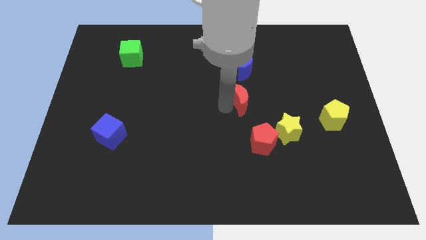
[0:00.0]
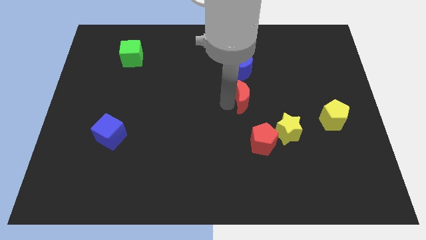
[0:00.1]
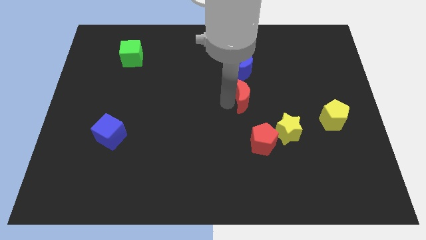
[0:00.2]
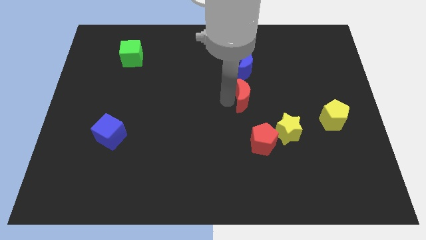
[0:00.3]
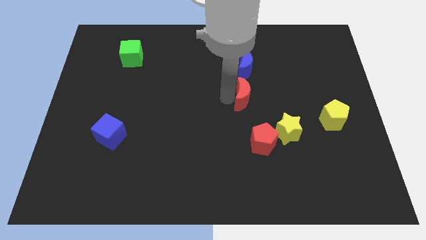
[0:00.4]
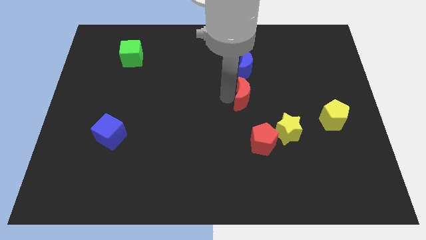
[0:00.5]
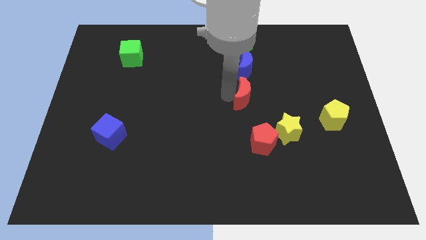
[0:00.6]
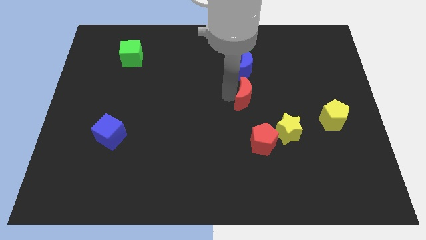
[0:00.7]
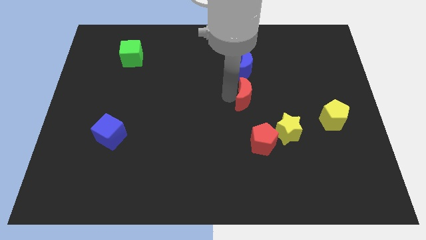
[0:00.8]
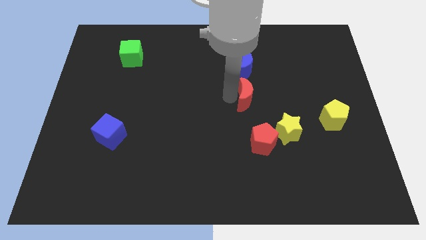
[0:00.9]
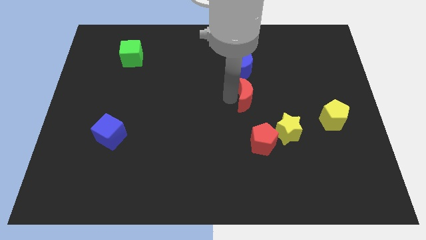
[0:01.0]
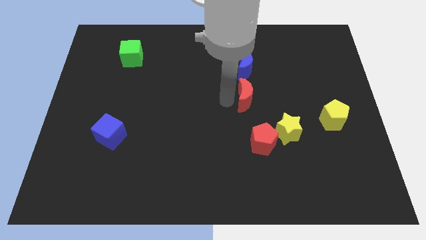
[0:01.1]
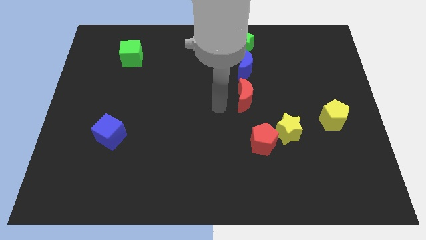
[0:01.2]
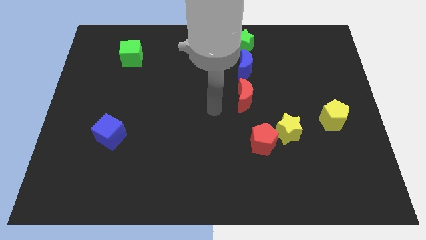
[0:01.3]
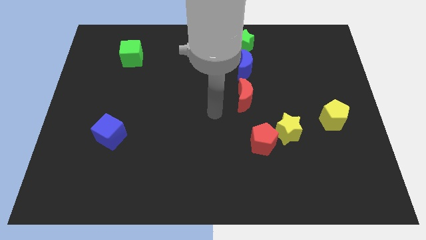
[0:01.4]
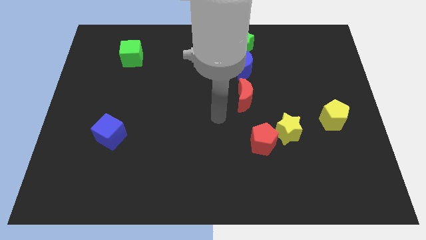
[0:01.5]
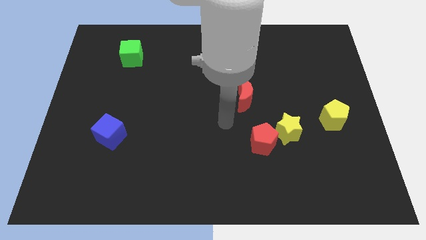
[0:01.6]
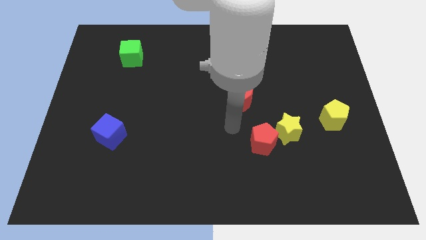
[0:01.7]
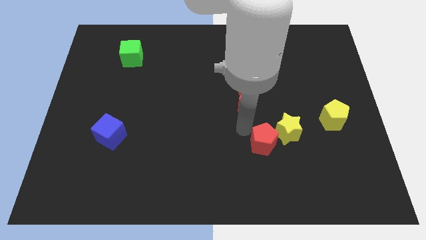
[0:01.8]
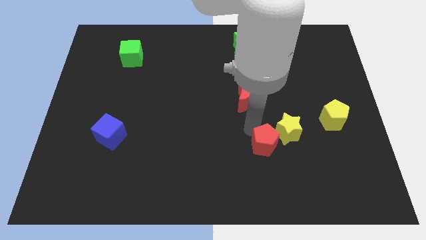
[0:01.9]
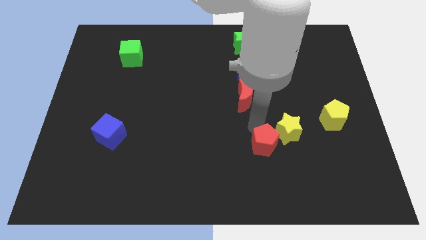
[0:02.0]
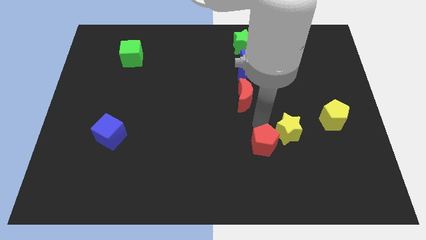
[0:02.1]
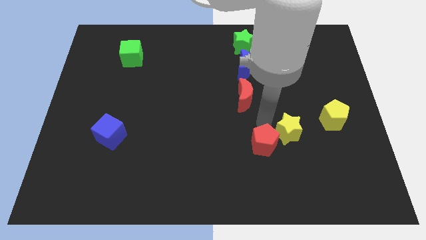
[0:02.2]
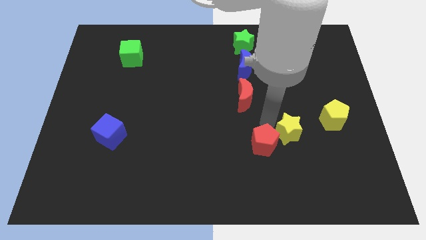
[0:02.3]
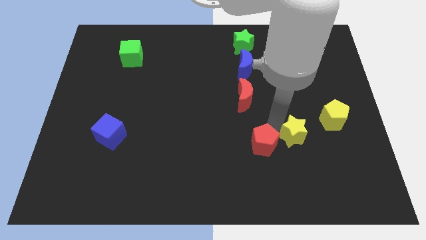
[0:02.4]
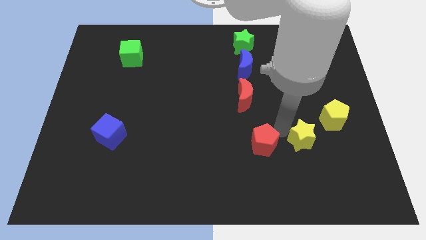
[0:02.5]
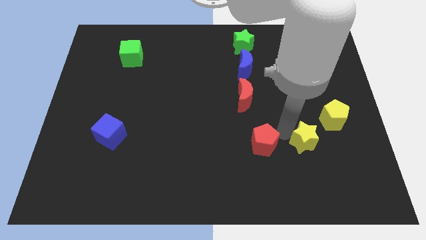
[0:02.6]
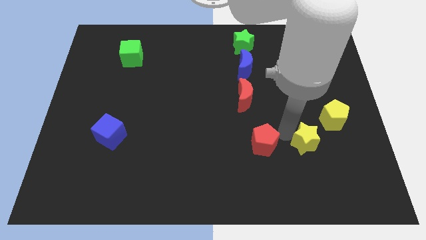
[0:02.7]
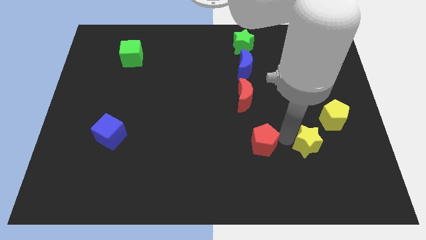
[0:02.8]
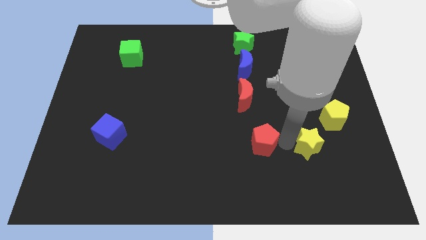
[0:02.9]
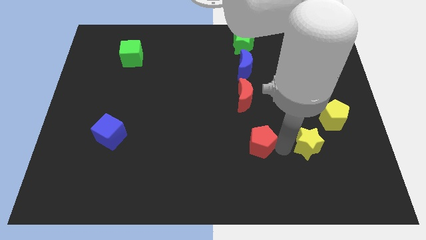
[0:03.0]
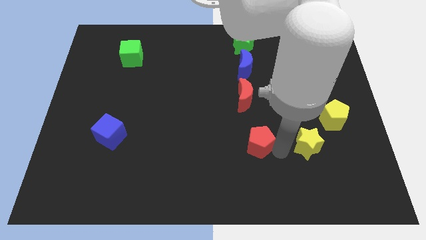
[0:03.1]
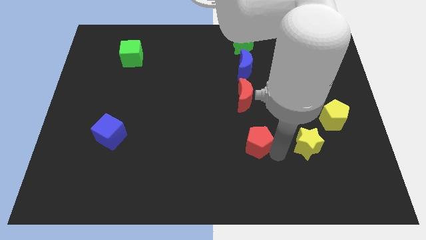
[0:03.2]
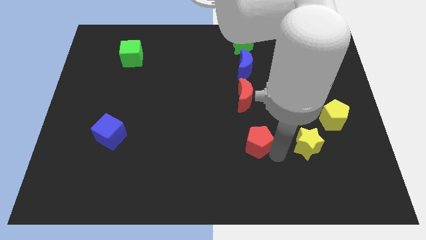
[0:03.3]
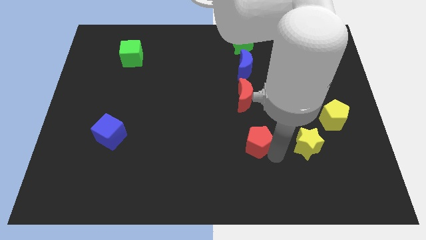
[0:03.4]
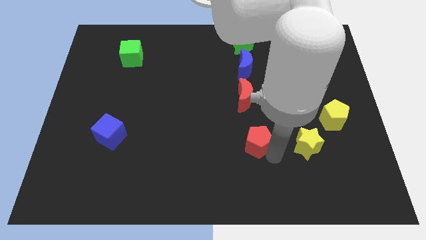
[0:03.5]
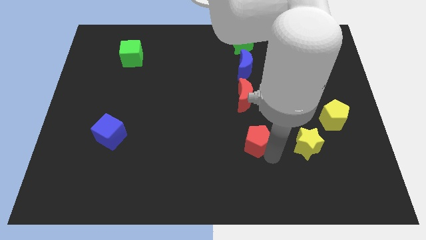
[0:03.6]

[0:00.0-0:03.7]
place the yellow star diagonal to the yellow pentagon

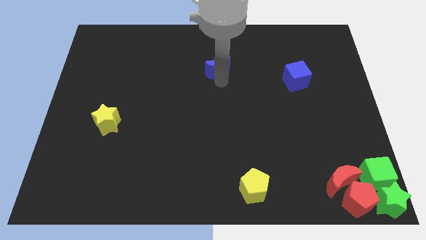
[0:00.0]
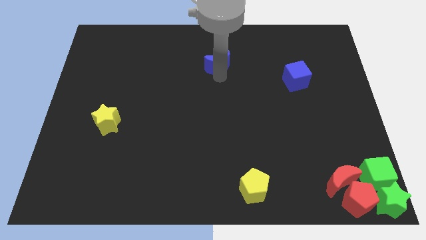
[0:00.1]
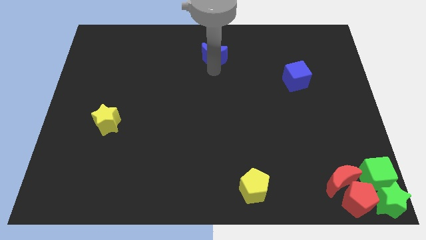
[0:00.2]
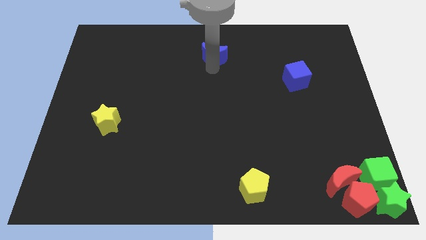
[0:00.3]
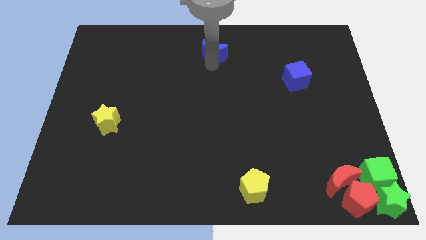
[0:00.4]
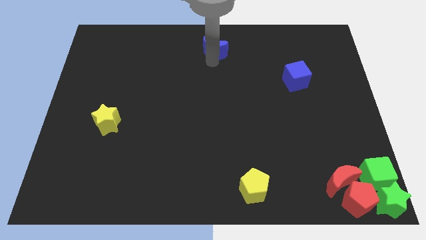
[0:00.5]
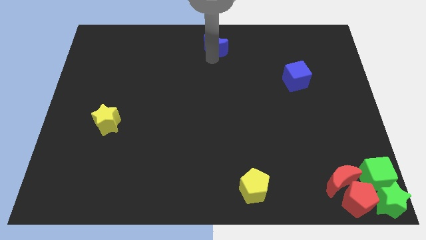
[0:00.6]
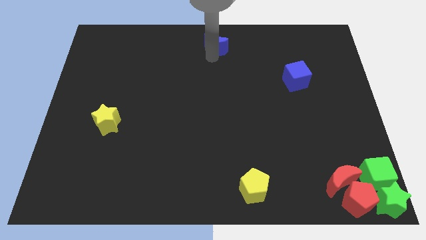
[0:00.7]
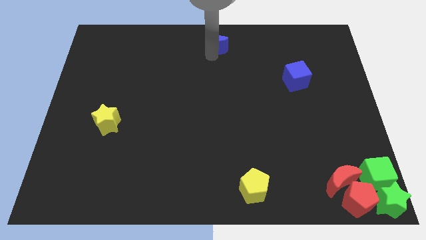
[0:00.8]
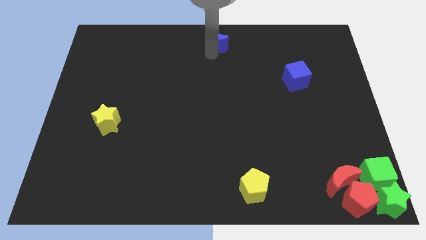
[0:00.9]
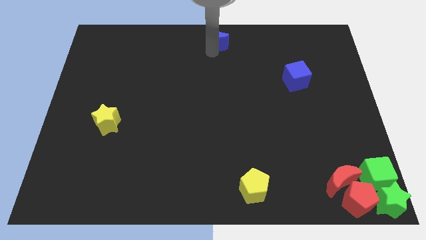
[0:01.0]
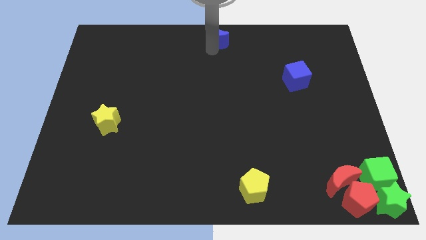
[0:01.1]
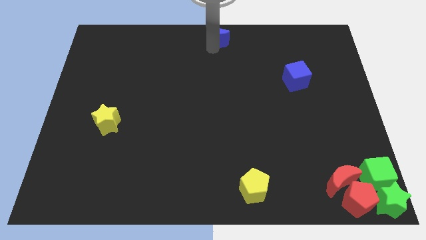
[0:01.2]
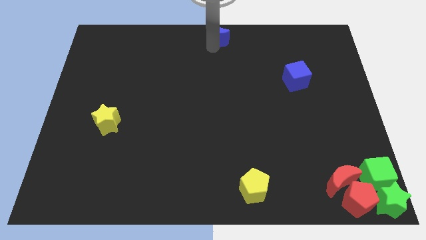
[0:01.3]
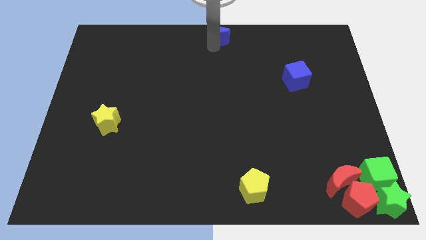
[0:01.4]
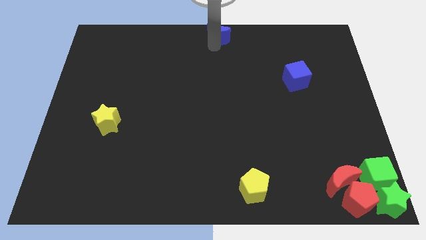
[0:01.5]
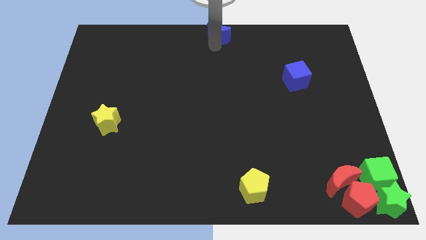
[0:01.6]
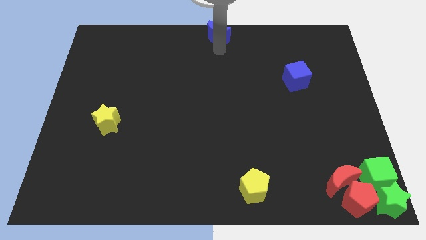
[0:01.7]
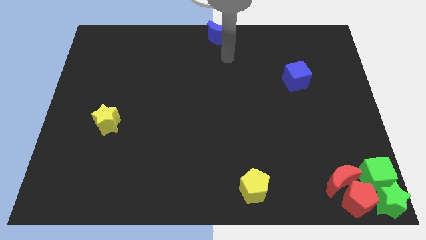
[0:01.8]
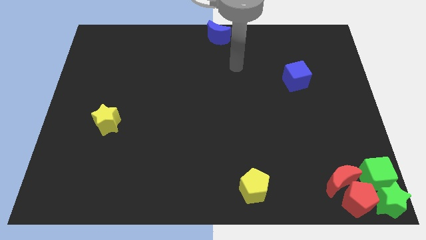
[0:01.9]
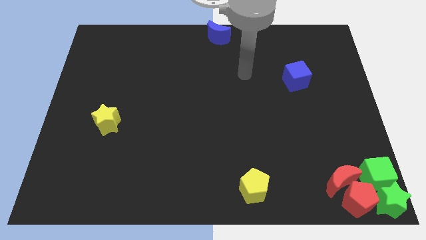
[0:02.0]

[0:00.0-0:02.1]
move the blue crescent to the top center of the board

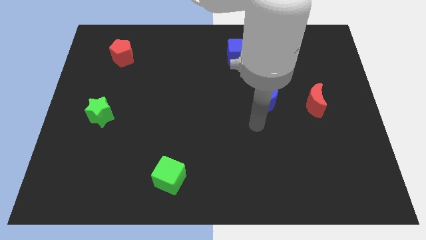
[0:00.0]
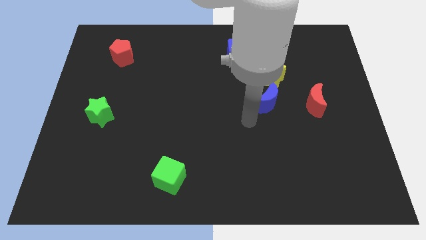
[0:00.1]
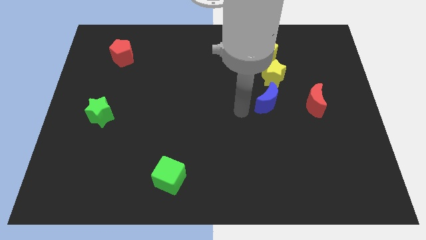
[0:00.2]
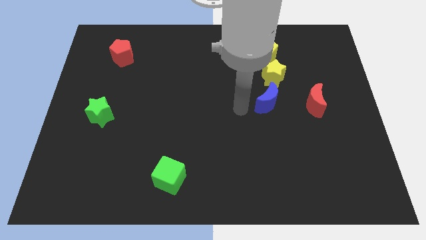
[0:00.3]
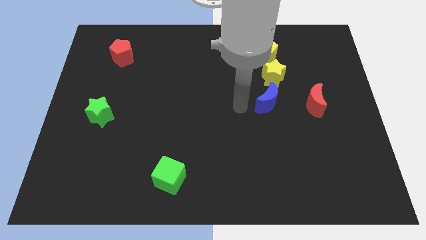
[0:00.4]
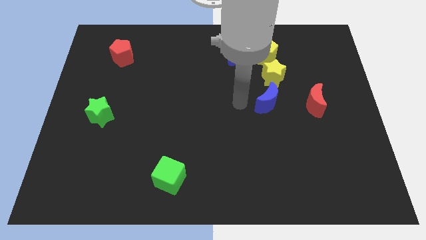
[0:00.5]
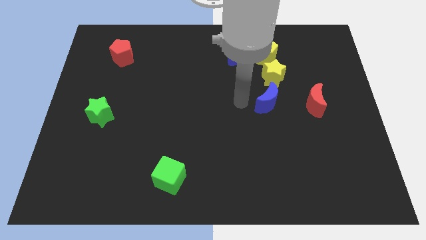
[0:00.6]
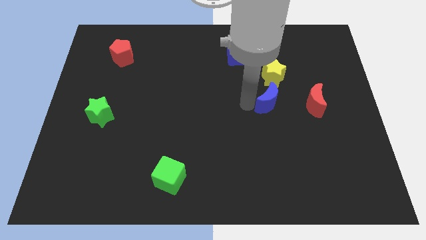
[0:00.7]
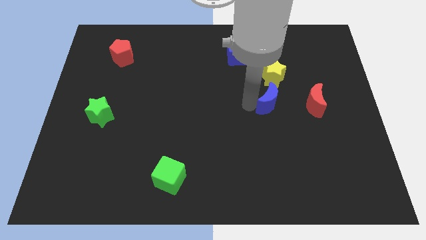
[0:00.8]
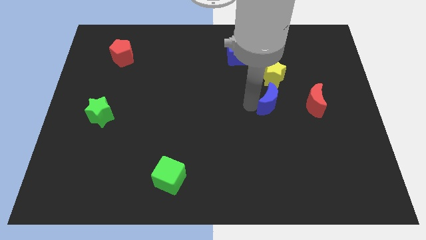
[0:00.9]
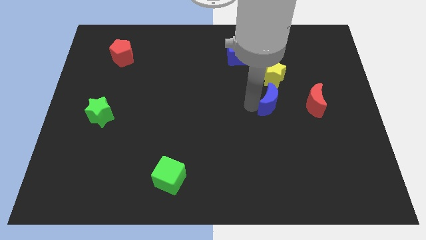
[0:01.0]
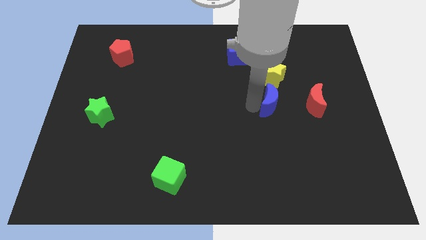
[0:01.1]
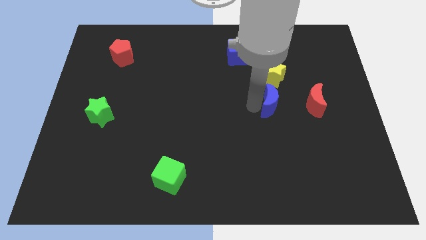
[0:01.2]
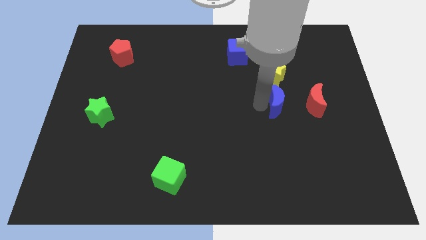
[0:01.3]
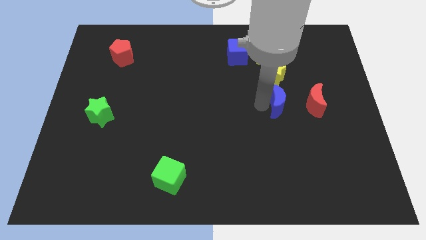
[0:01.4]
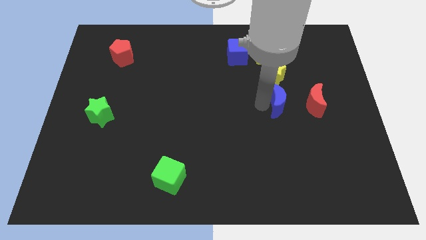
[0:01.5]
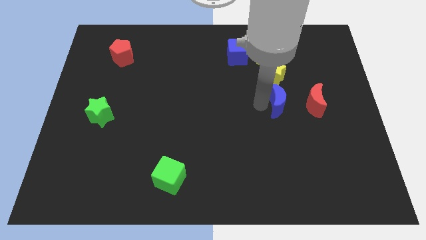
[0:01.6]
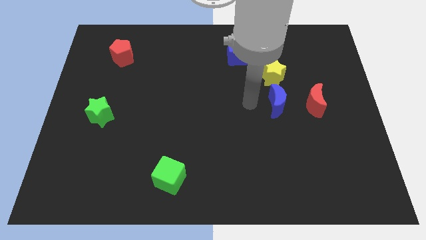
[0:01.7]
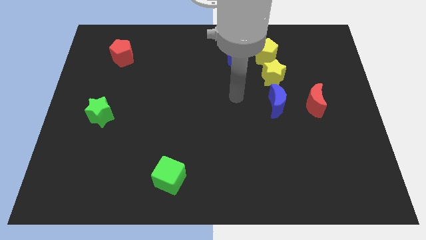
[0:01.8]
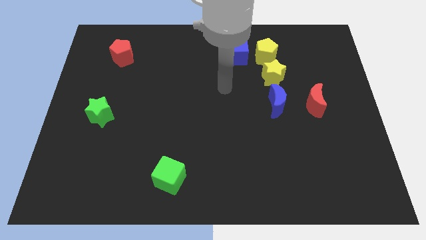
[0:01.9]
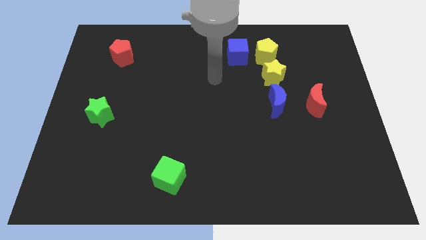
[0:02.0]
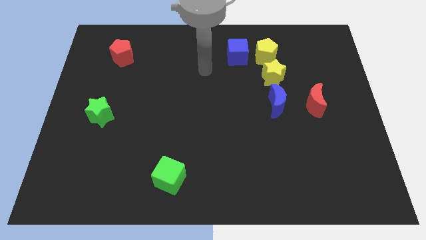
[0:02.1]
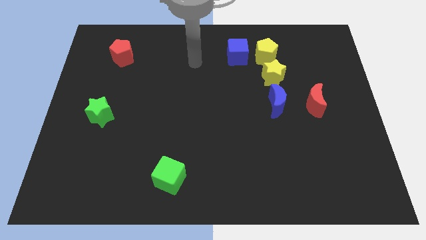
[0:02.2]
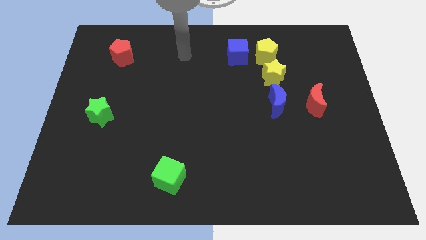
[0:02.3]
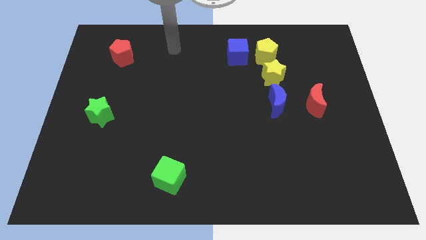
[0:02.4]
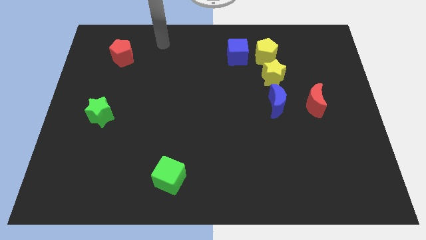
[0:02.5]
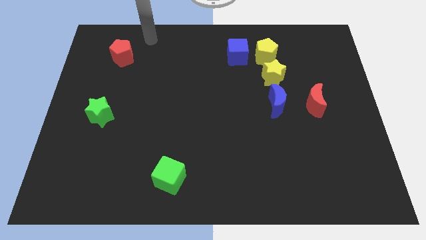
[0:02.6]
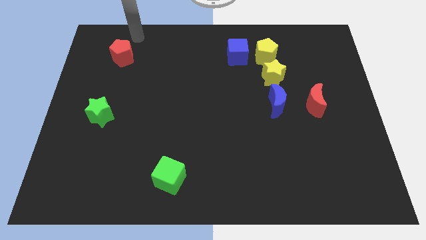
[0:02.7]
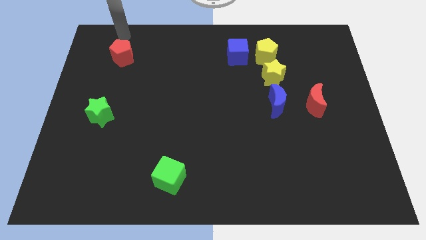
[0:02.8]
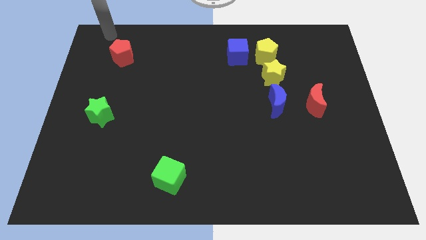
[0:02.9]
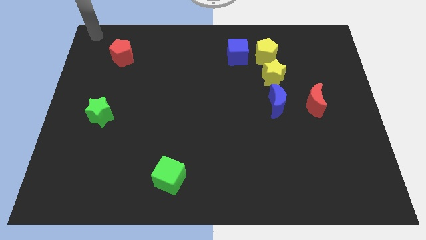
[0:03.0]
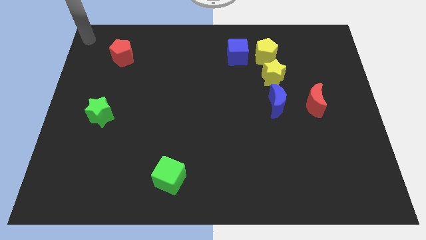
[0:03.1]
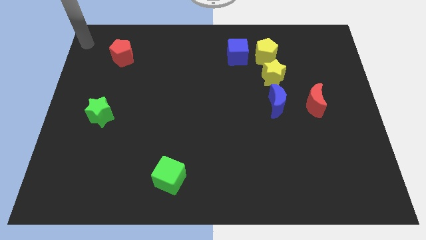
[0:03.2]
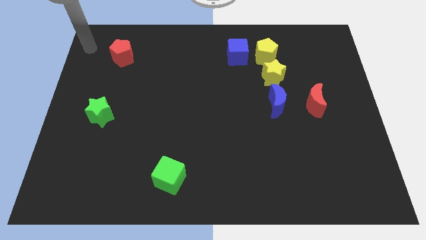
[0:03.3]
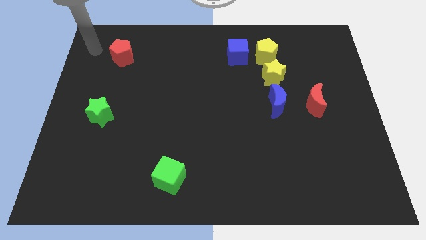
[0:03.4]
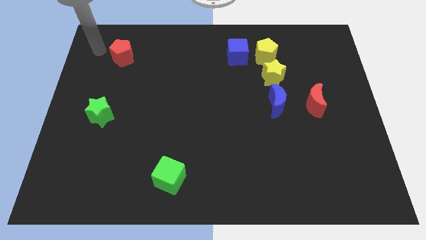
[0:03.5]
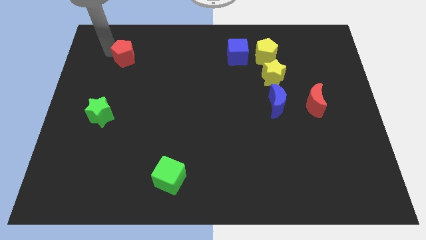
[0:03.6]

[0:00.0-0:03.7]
move your hand towards the top left corner
